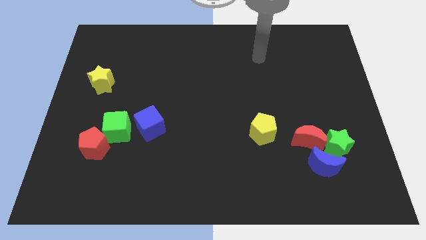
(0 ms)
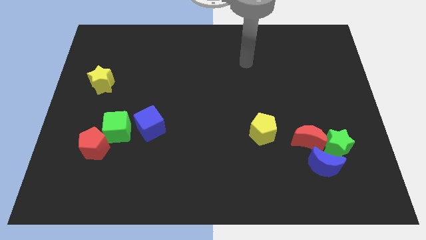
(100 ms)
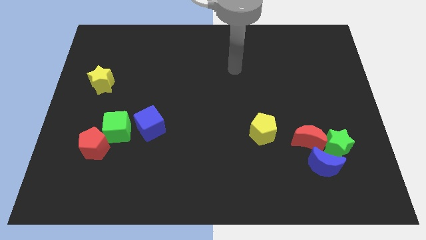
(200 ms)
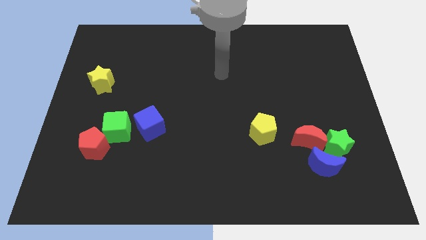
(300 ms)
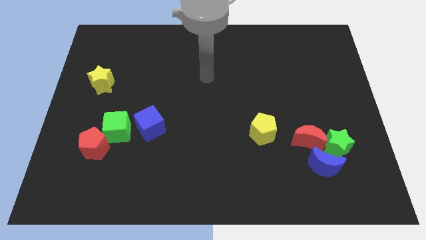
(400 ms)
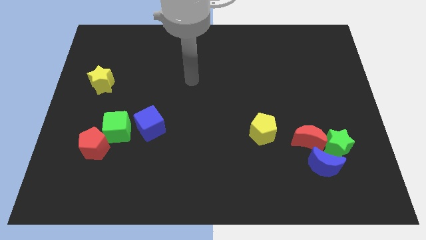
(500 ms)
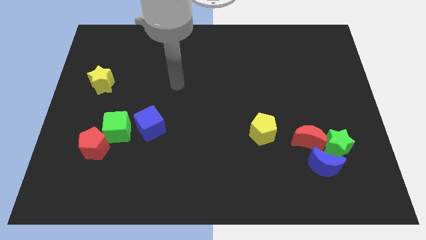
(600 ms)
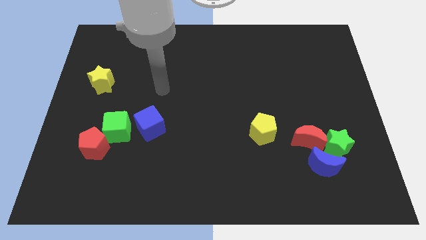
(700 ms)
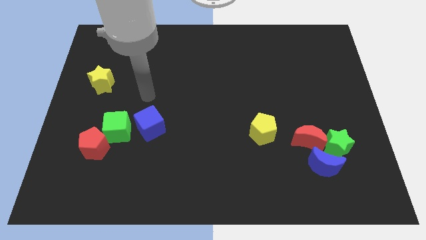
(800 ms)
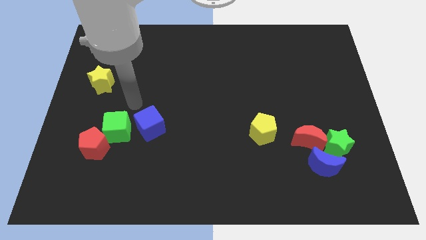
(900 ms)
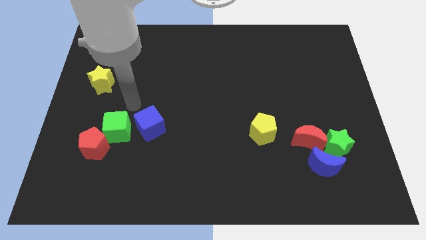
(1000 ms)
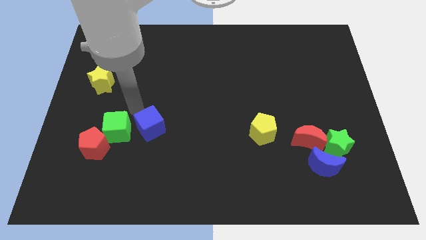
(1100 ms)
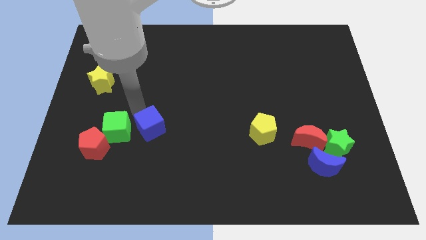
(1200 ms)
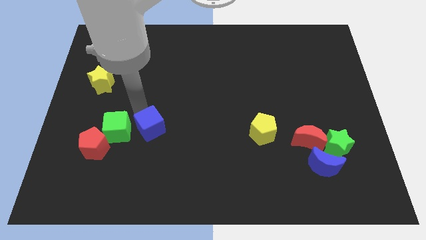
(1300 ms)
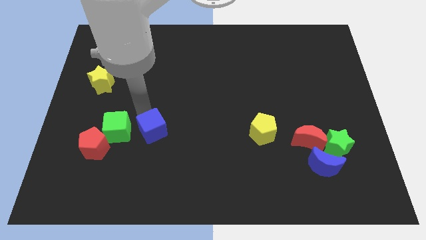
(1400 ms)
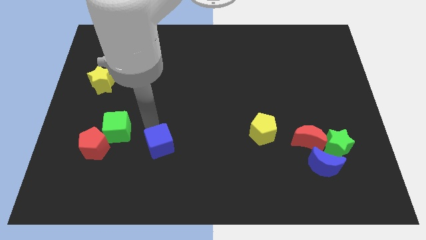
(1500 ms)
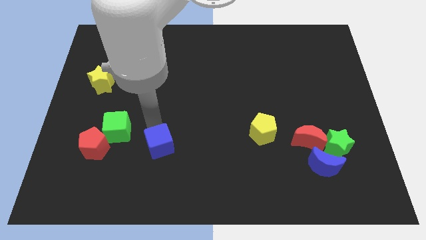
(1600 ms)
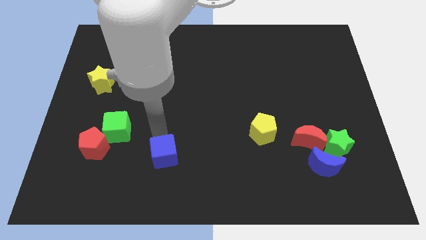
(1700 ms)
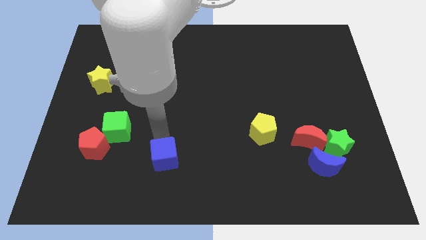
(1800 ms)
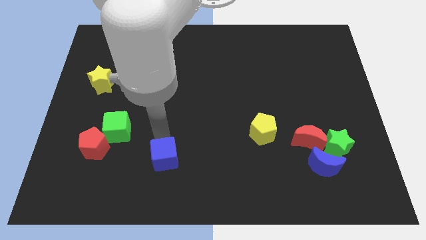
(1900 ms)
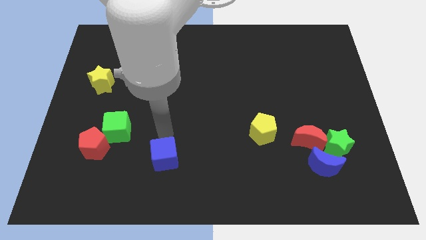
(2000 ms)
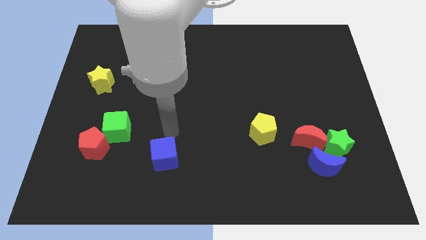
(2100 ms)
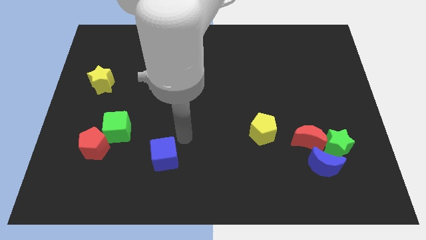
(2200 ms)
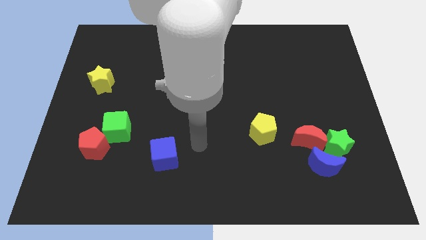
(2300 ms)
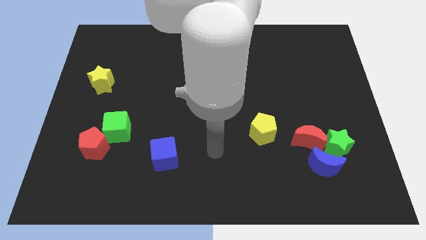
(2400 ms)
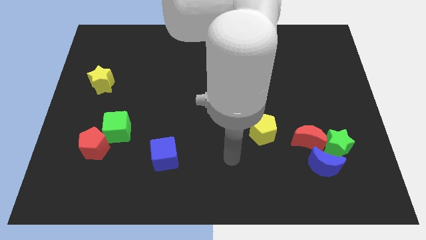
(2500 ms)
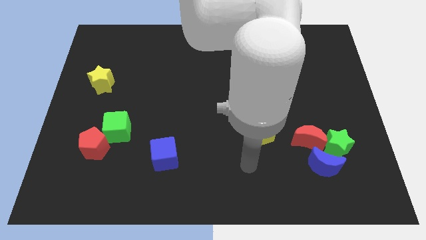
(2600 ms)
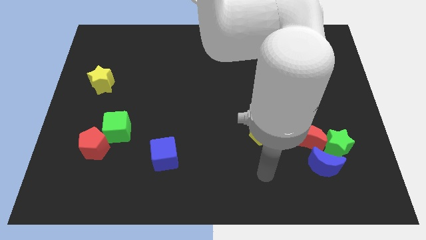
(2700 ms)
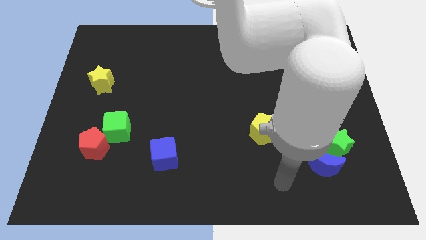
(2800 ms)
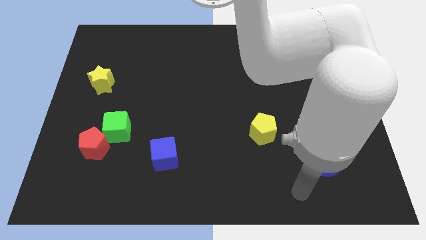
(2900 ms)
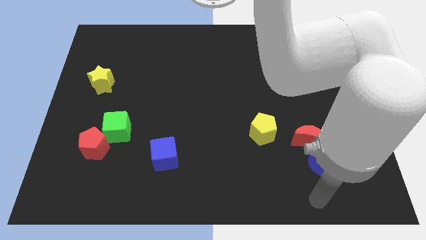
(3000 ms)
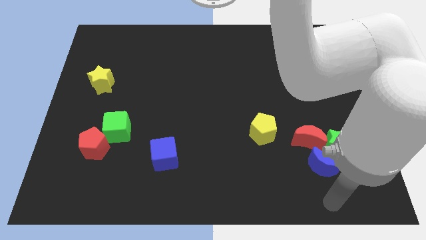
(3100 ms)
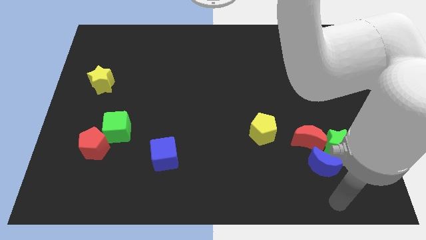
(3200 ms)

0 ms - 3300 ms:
move blue cube slightly down

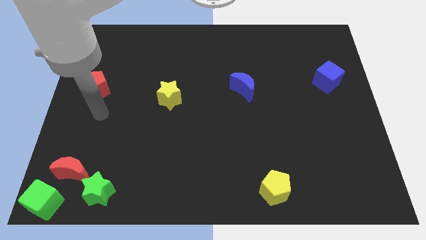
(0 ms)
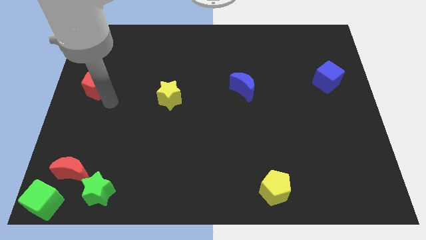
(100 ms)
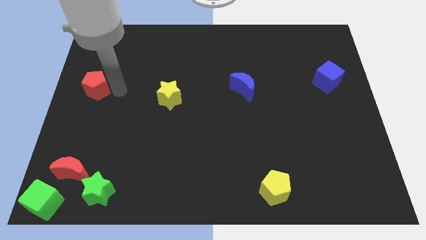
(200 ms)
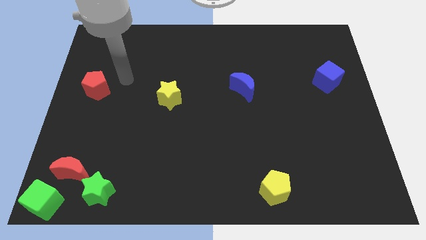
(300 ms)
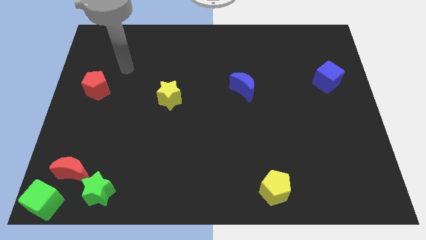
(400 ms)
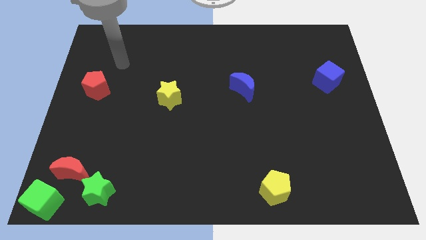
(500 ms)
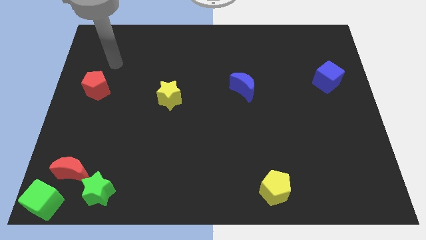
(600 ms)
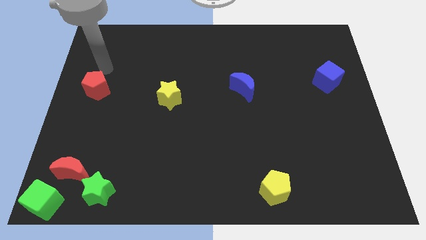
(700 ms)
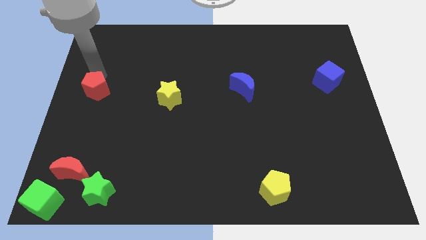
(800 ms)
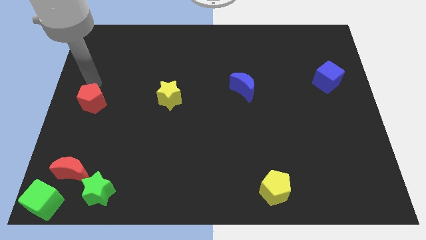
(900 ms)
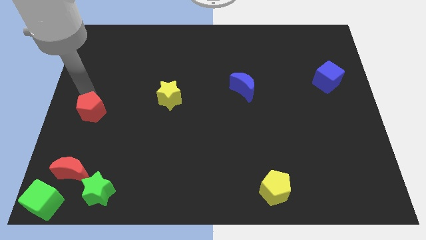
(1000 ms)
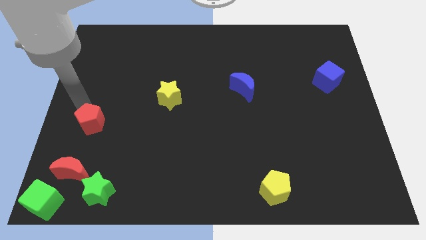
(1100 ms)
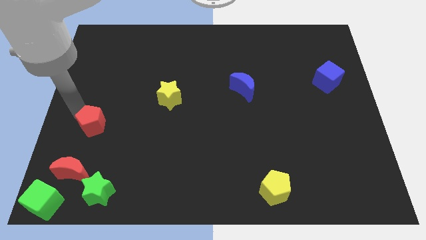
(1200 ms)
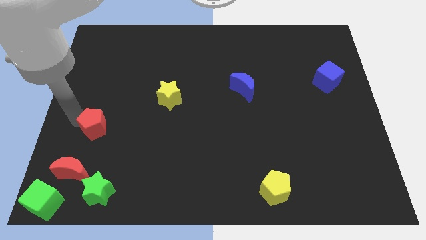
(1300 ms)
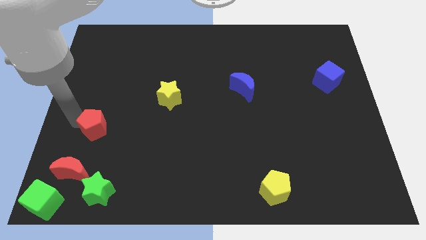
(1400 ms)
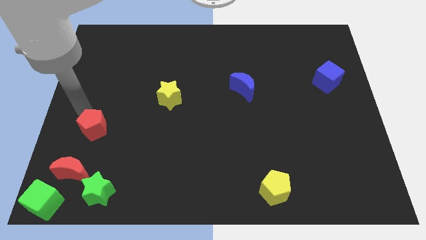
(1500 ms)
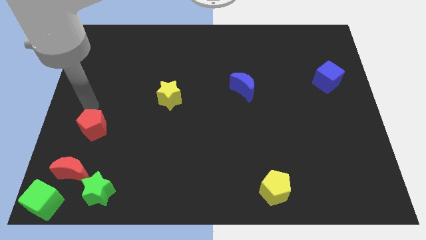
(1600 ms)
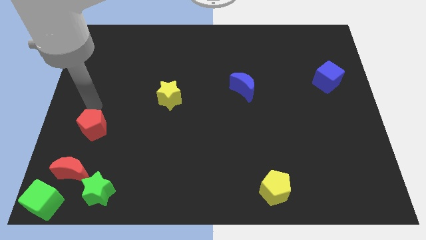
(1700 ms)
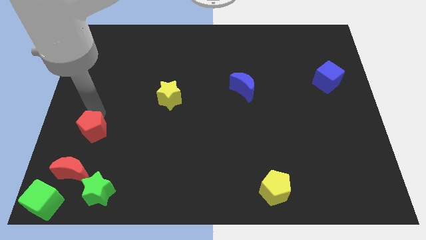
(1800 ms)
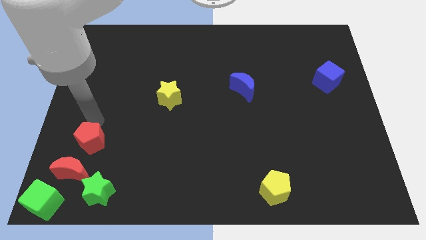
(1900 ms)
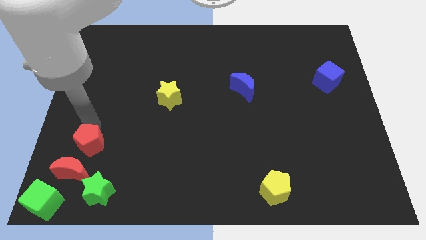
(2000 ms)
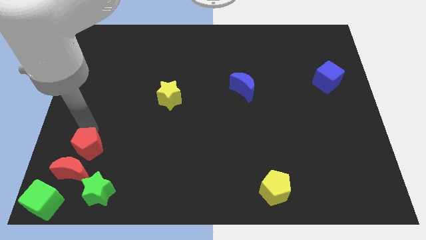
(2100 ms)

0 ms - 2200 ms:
drag the red pentagon close to the red moon

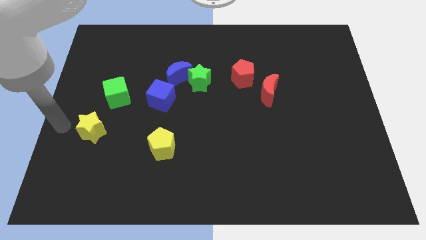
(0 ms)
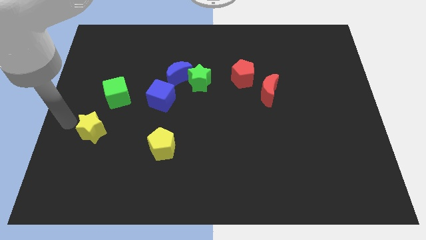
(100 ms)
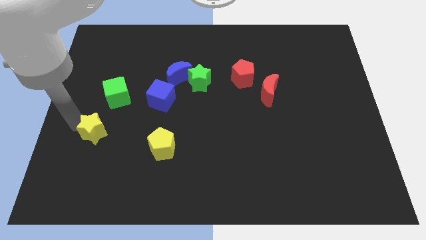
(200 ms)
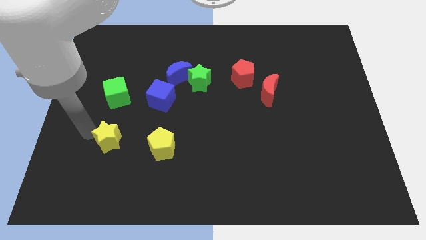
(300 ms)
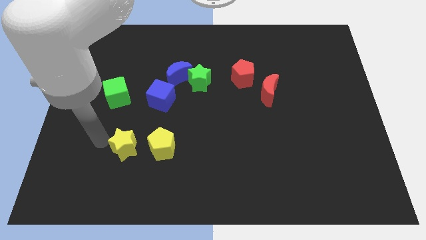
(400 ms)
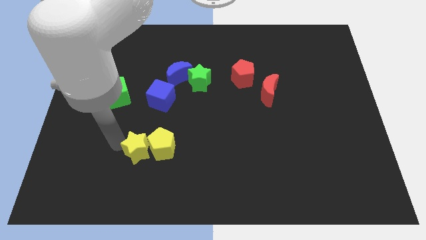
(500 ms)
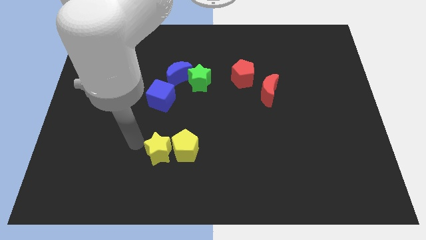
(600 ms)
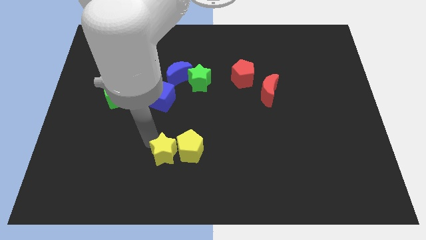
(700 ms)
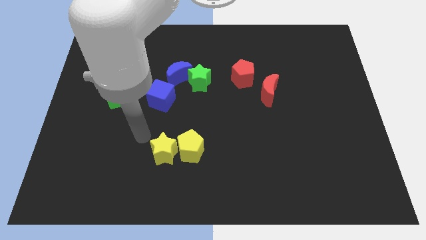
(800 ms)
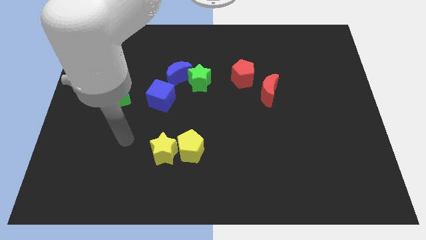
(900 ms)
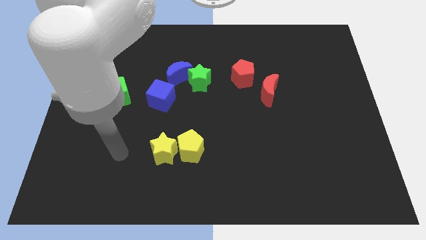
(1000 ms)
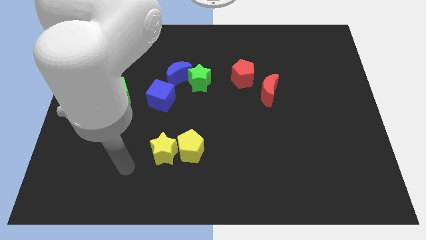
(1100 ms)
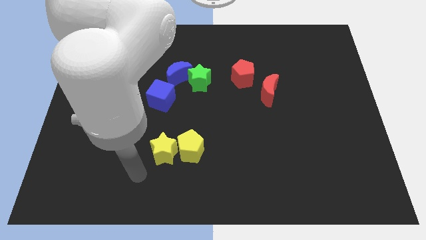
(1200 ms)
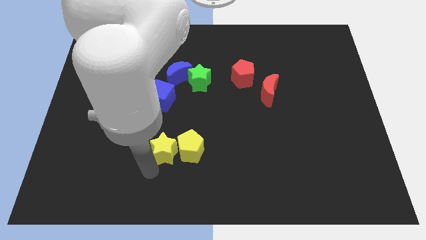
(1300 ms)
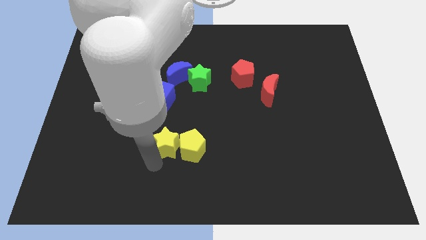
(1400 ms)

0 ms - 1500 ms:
place the yellow star to the left side of the yellow pentagon

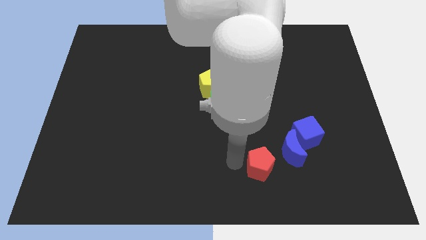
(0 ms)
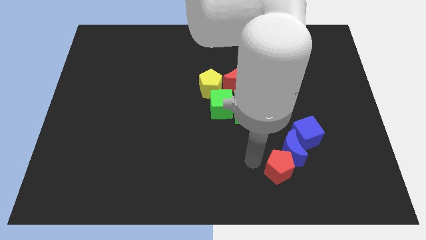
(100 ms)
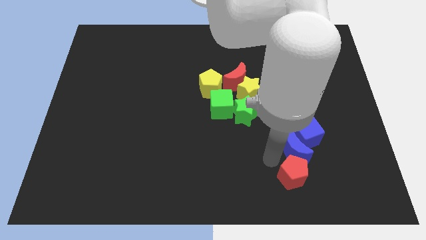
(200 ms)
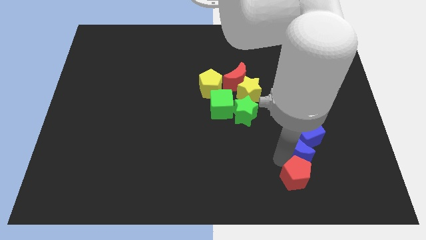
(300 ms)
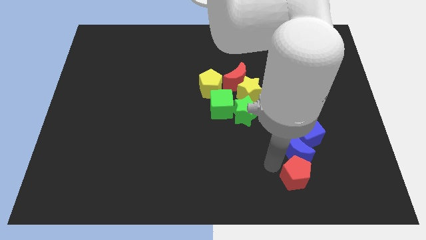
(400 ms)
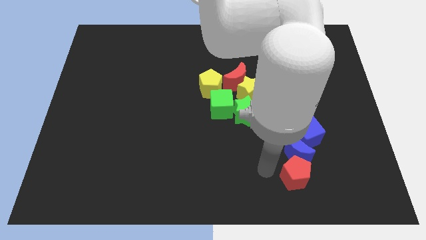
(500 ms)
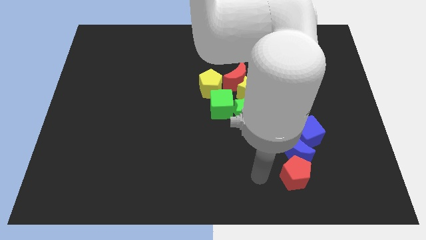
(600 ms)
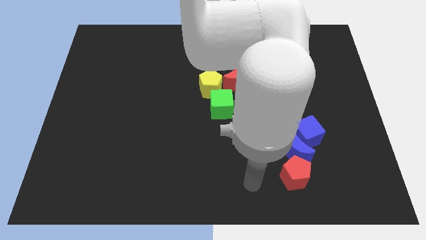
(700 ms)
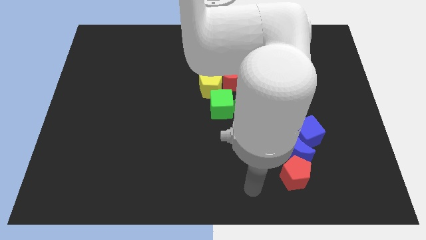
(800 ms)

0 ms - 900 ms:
move the red pentagon to the bottom of the blue crescent

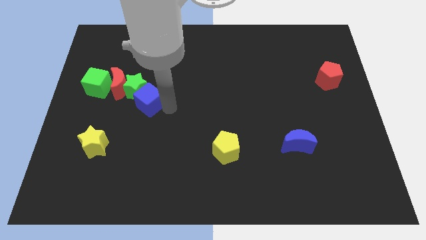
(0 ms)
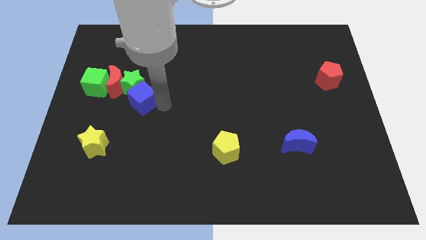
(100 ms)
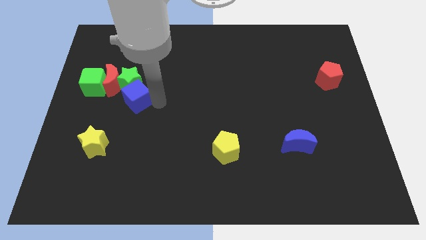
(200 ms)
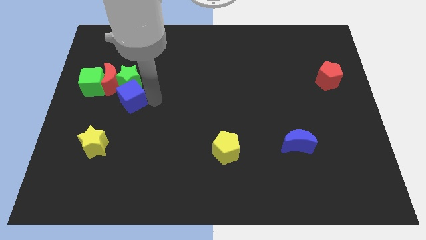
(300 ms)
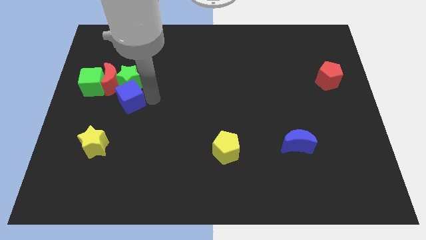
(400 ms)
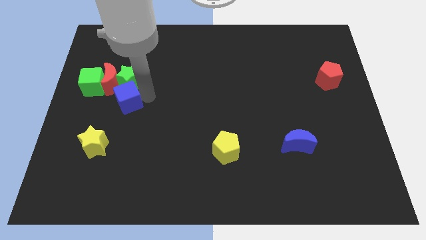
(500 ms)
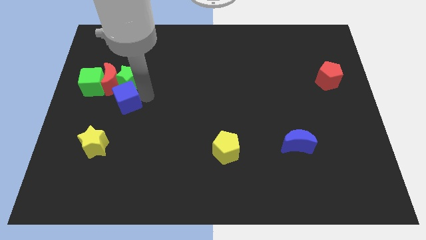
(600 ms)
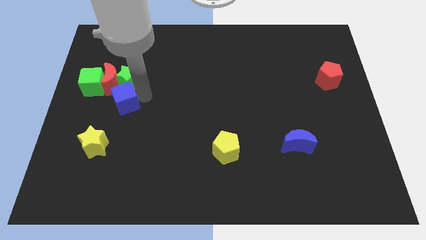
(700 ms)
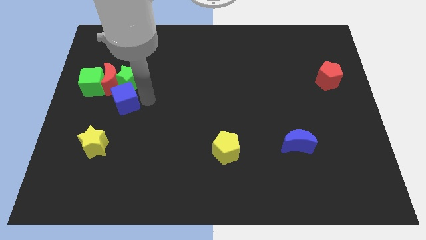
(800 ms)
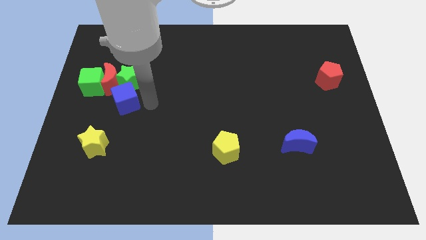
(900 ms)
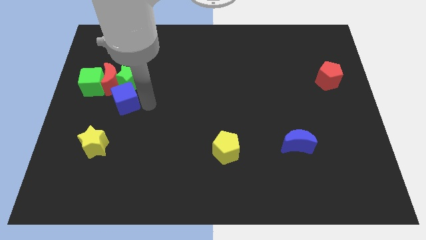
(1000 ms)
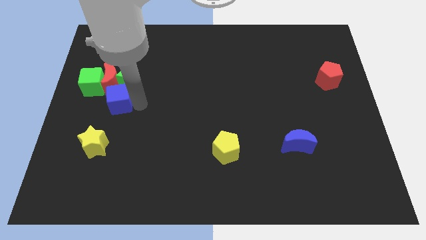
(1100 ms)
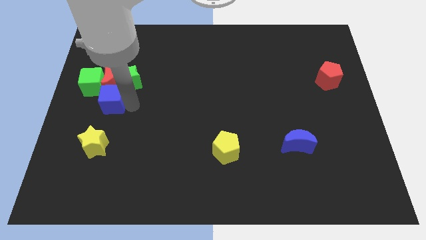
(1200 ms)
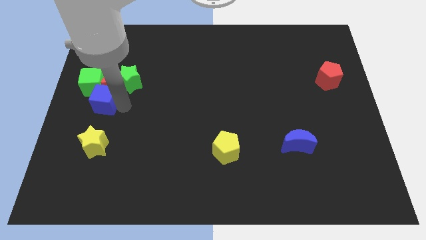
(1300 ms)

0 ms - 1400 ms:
place the blue cube down to the red moon
